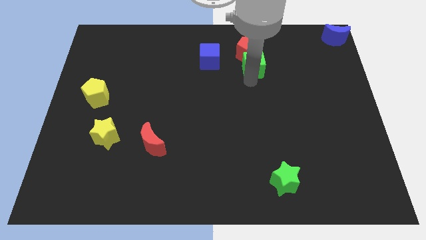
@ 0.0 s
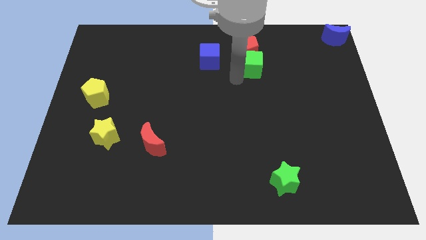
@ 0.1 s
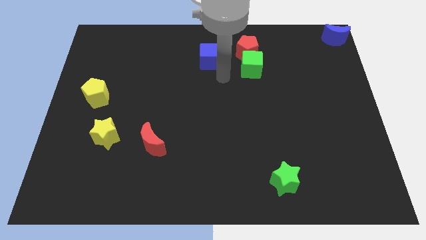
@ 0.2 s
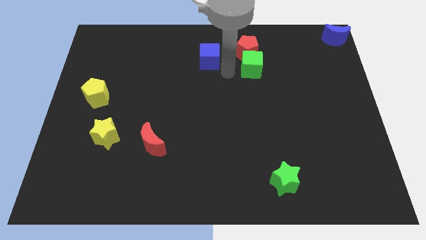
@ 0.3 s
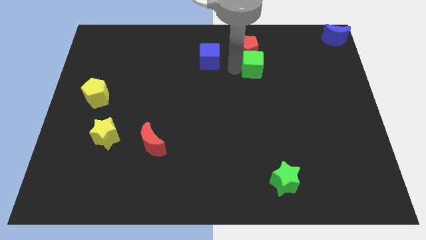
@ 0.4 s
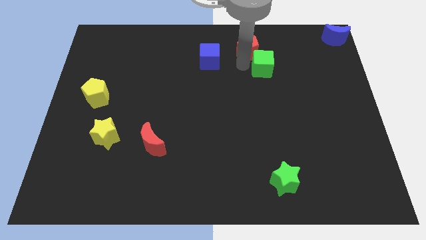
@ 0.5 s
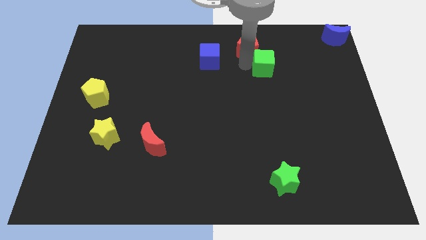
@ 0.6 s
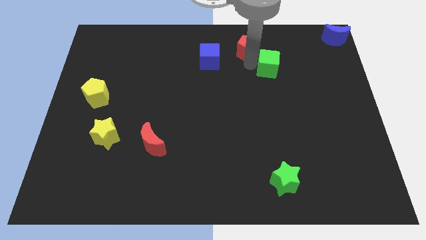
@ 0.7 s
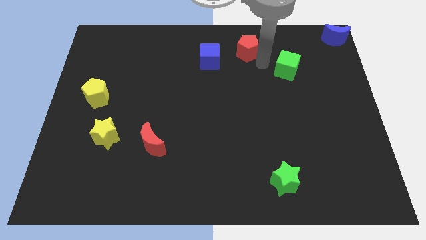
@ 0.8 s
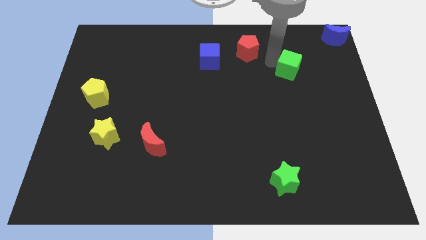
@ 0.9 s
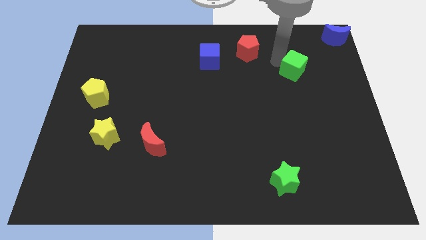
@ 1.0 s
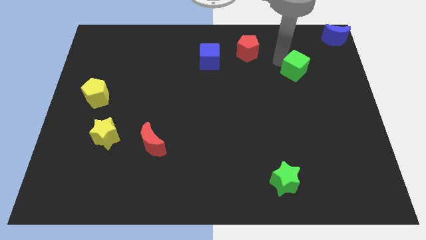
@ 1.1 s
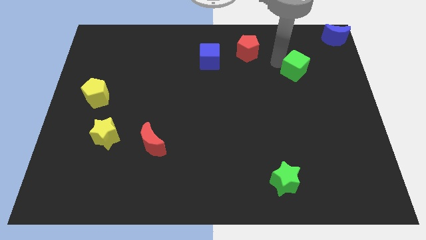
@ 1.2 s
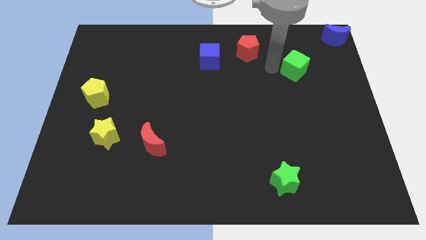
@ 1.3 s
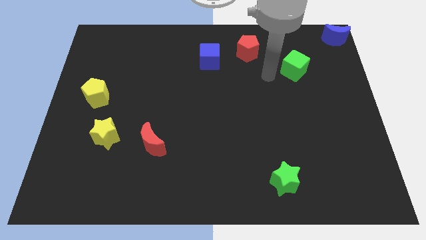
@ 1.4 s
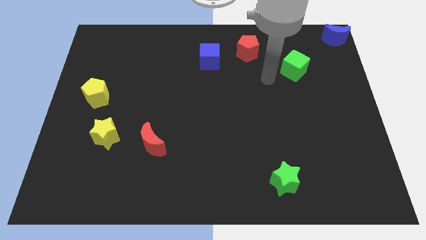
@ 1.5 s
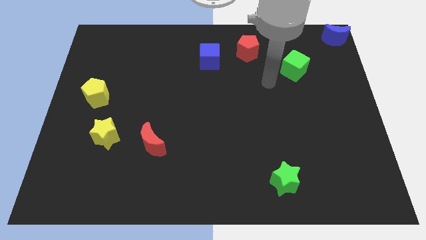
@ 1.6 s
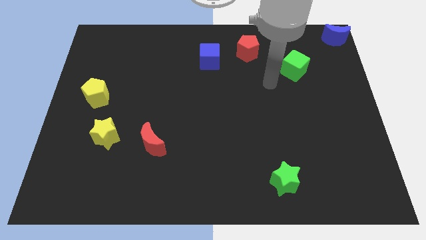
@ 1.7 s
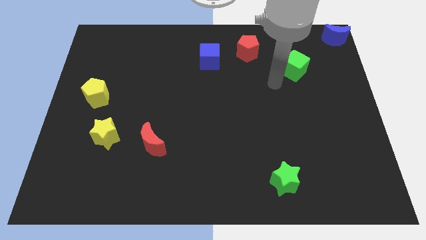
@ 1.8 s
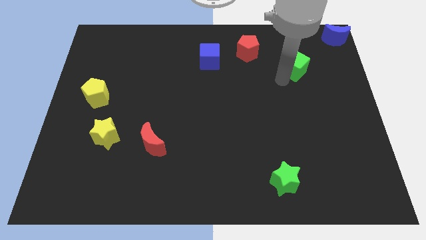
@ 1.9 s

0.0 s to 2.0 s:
separate green cube from the red pentagon

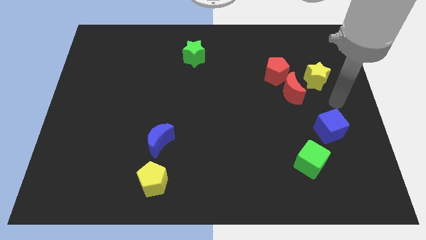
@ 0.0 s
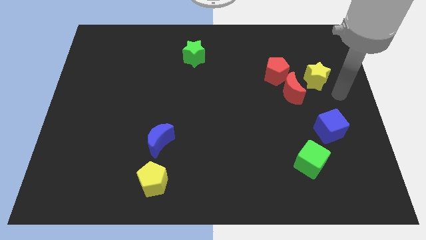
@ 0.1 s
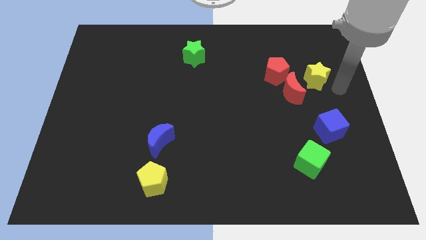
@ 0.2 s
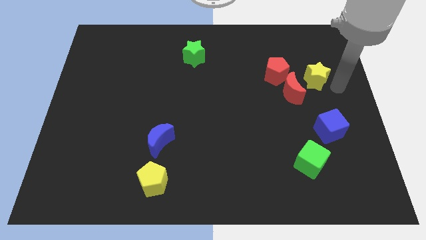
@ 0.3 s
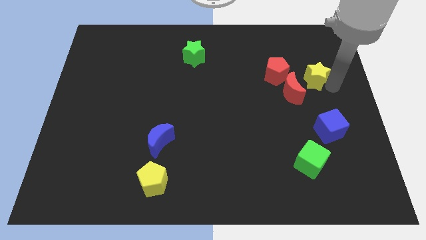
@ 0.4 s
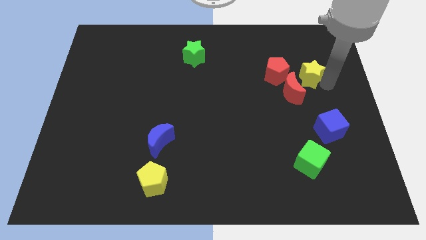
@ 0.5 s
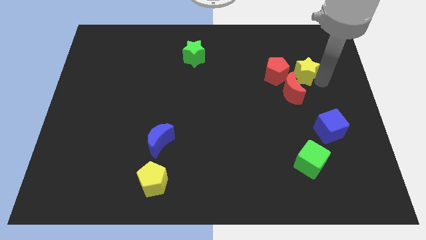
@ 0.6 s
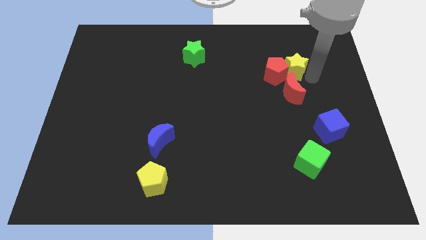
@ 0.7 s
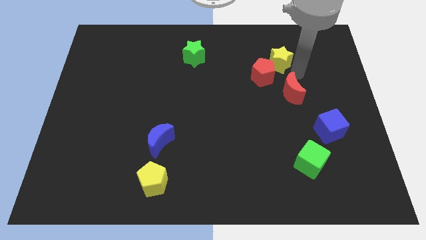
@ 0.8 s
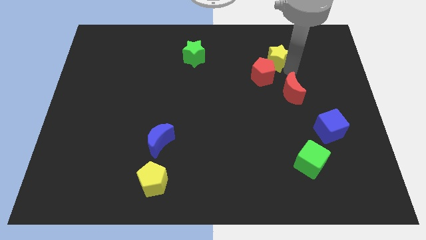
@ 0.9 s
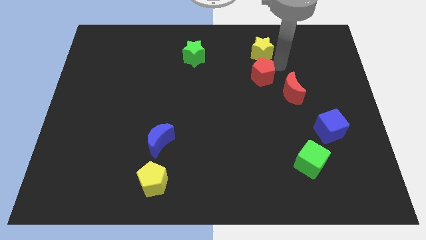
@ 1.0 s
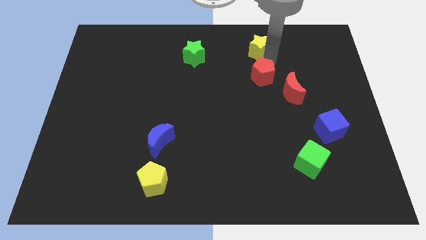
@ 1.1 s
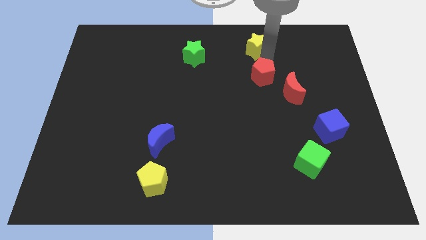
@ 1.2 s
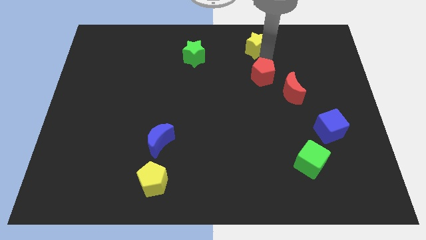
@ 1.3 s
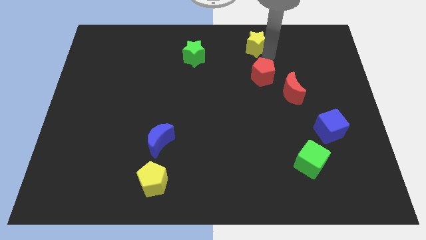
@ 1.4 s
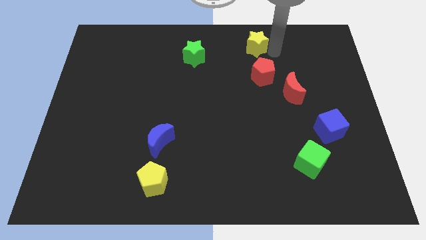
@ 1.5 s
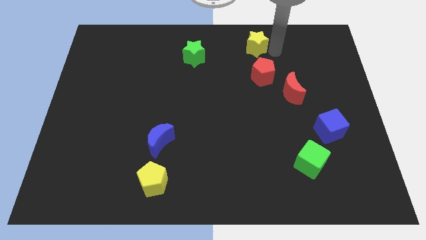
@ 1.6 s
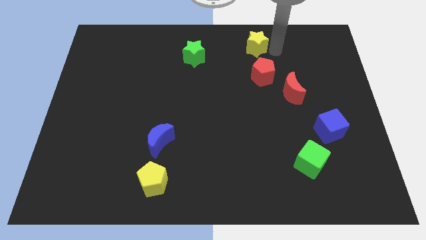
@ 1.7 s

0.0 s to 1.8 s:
place the yellow star above the red pentagon

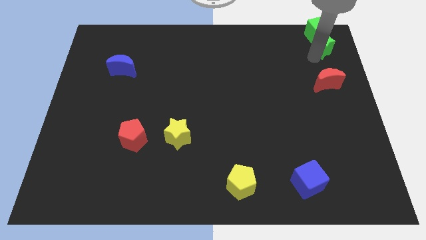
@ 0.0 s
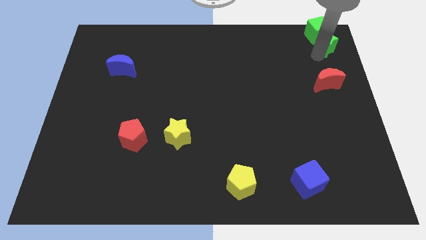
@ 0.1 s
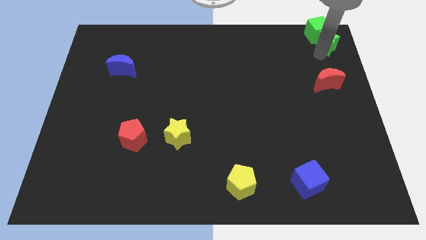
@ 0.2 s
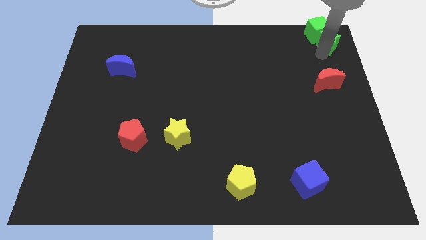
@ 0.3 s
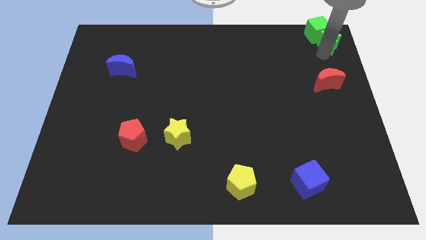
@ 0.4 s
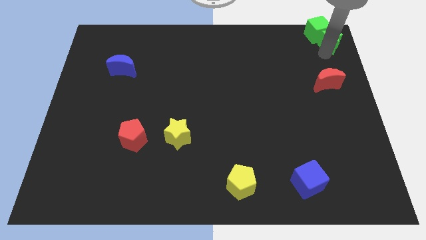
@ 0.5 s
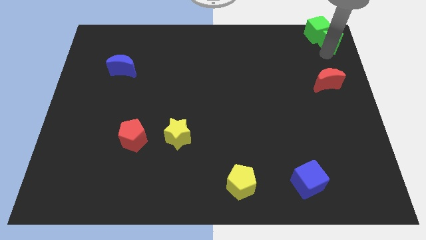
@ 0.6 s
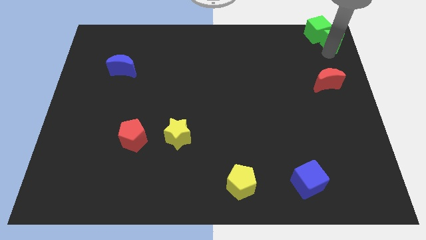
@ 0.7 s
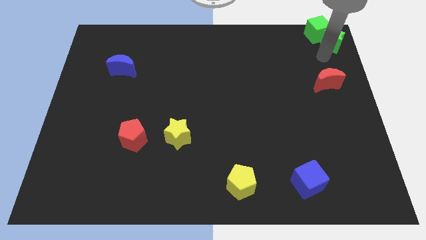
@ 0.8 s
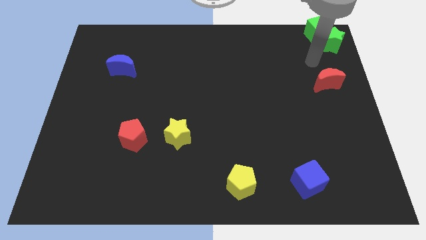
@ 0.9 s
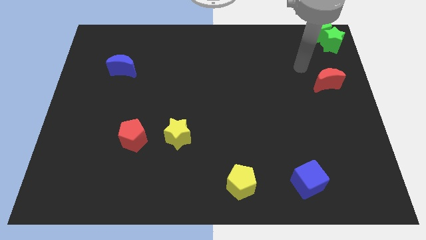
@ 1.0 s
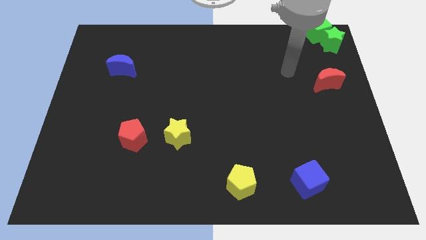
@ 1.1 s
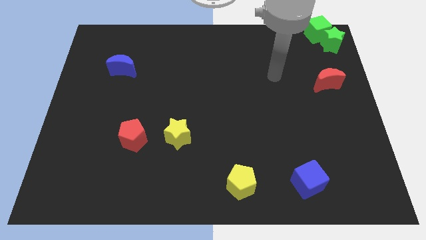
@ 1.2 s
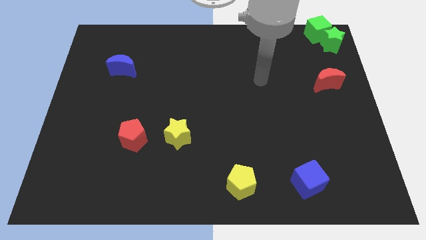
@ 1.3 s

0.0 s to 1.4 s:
move the green star to the right side of the green cube

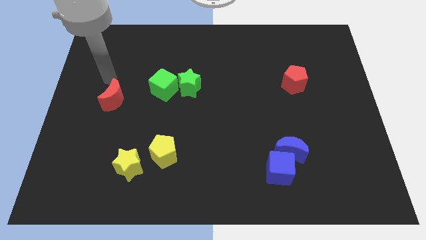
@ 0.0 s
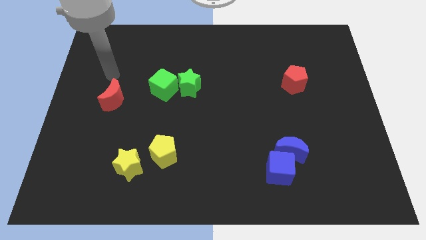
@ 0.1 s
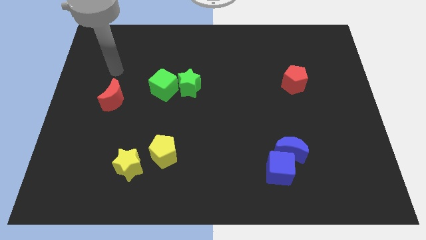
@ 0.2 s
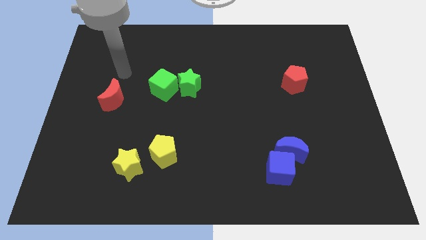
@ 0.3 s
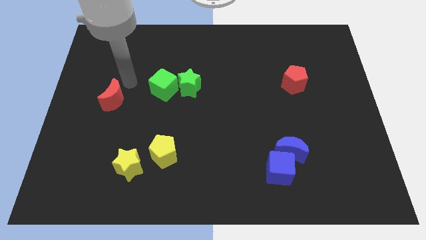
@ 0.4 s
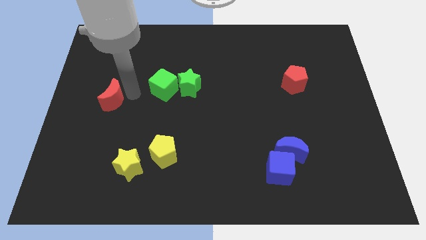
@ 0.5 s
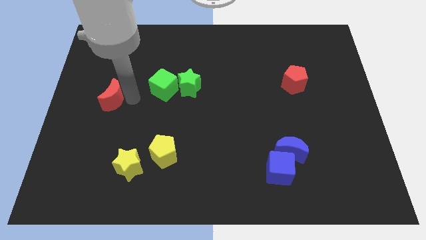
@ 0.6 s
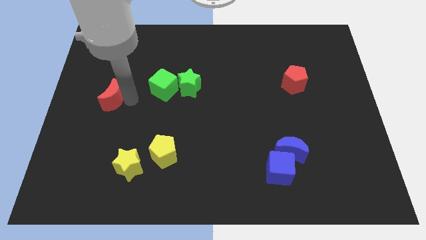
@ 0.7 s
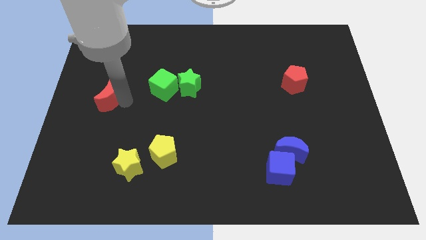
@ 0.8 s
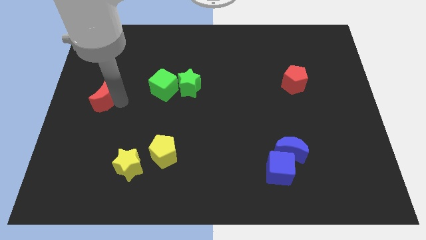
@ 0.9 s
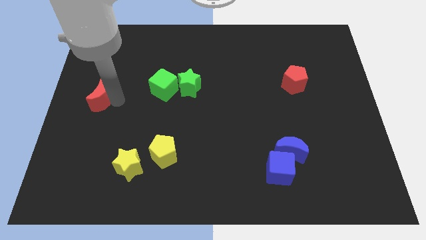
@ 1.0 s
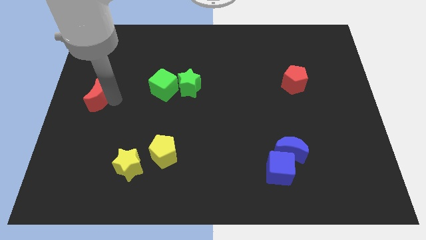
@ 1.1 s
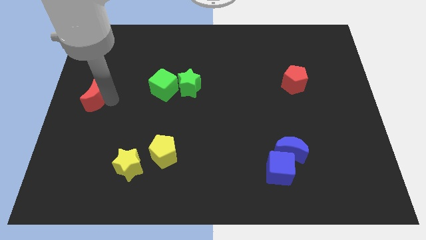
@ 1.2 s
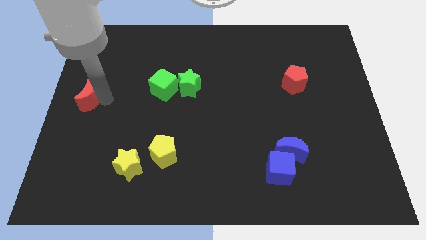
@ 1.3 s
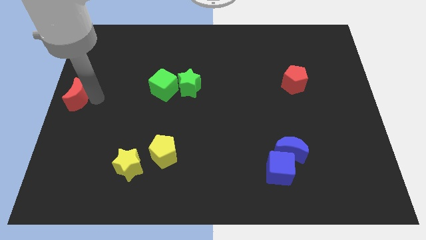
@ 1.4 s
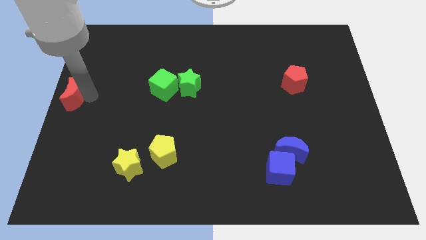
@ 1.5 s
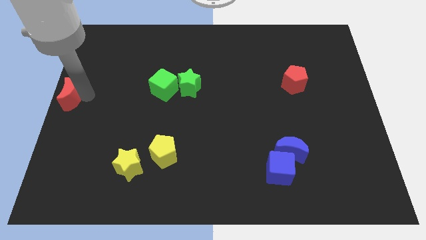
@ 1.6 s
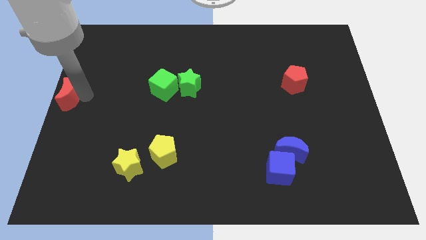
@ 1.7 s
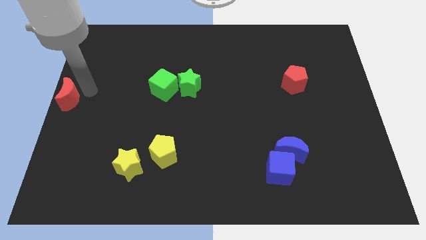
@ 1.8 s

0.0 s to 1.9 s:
move red crescent to the center left

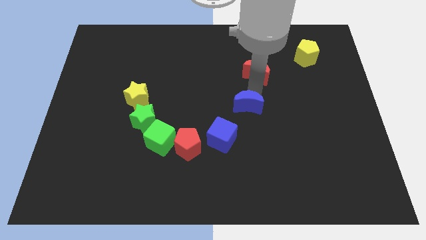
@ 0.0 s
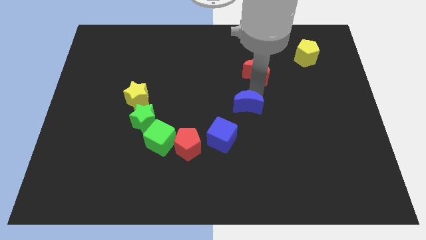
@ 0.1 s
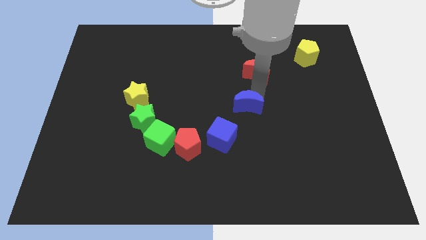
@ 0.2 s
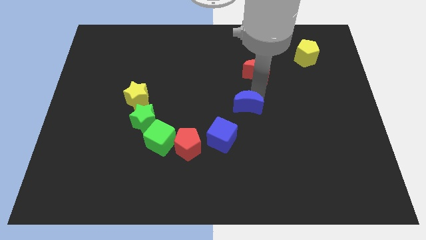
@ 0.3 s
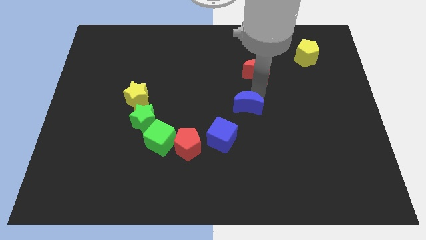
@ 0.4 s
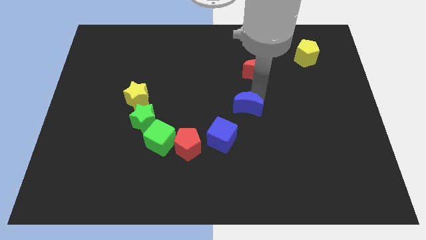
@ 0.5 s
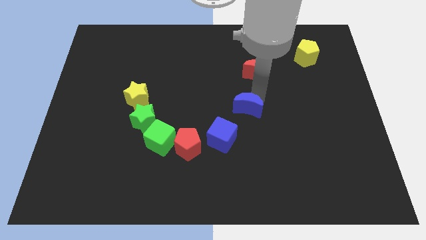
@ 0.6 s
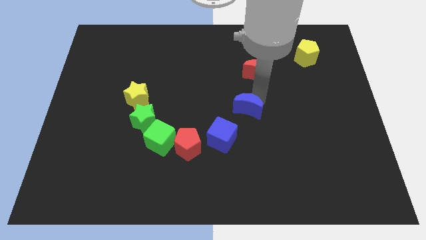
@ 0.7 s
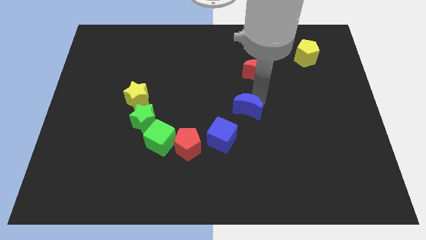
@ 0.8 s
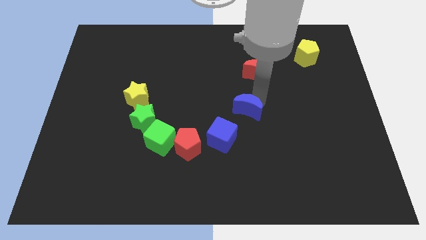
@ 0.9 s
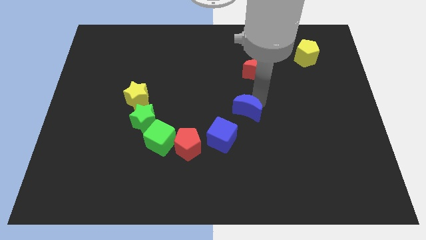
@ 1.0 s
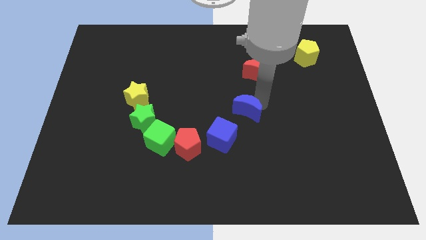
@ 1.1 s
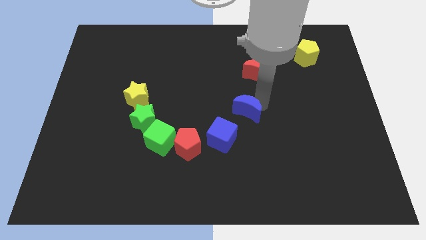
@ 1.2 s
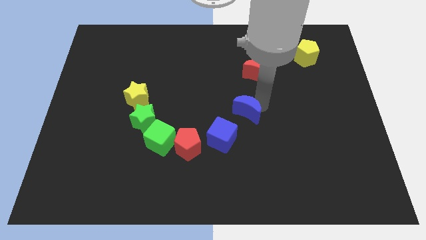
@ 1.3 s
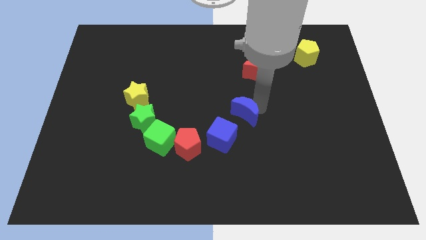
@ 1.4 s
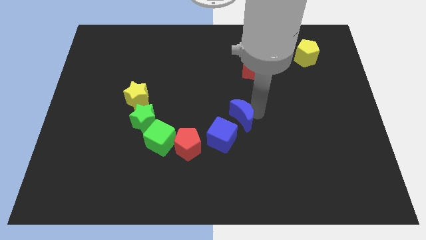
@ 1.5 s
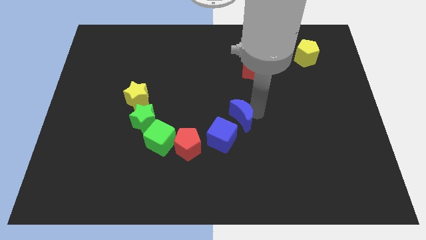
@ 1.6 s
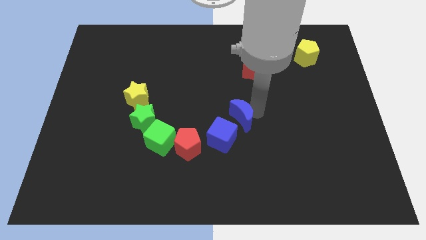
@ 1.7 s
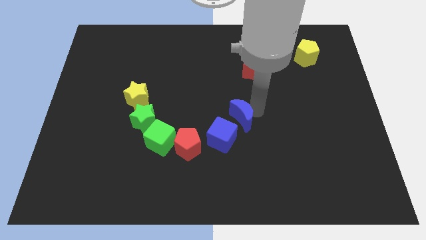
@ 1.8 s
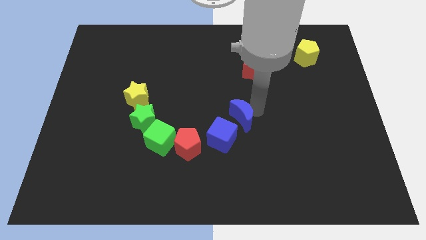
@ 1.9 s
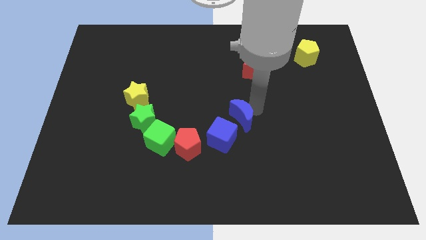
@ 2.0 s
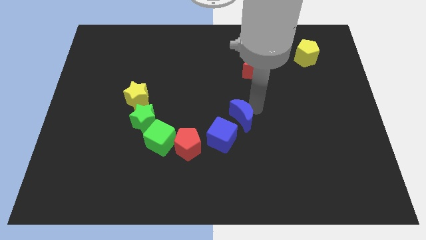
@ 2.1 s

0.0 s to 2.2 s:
put the blue moon diagonally top right to blue cube
